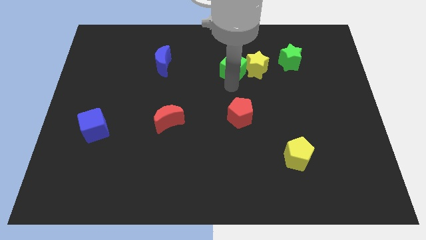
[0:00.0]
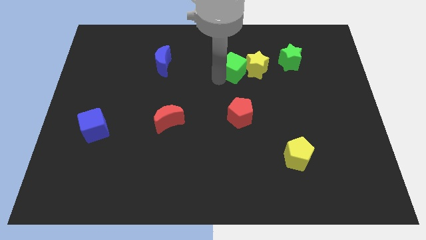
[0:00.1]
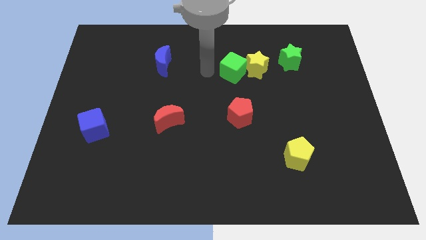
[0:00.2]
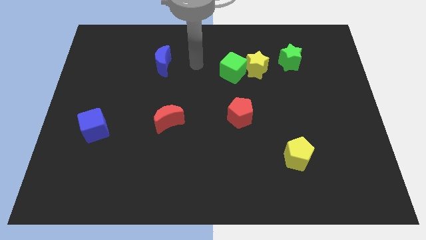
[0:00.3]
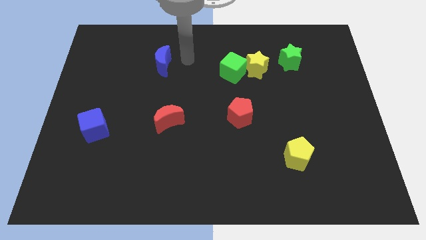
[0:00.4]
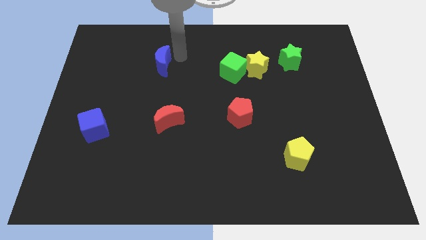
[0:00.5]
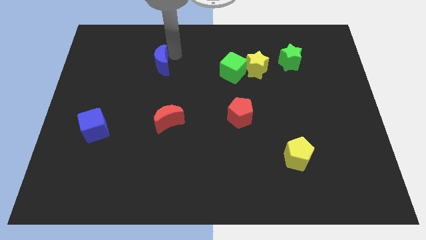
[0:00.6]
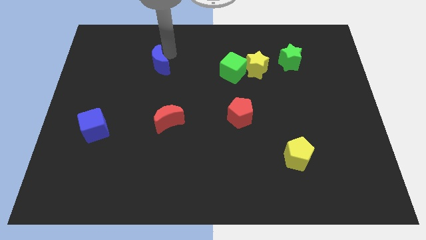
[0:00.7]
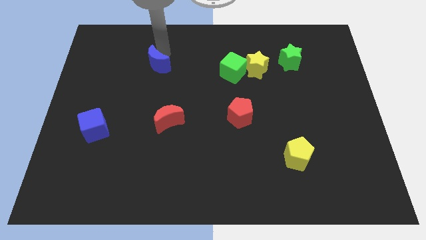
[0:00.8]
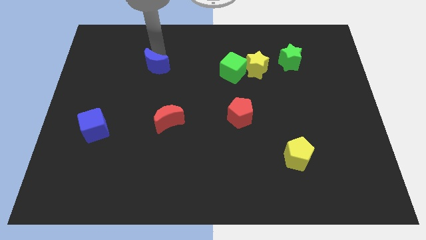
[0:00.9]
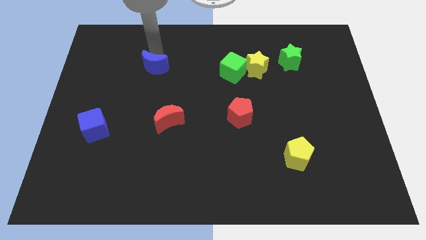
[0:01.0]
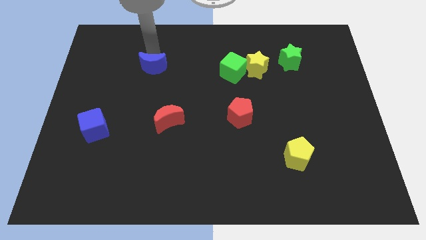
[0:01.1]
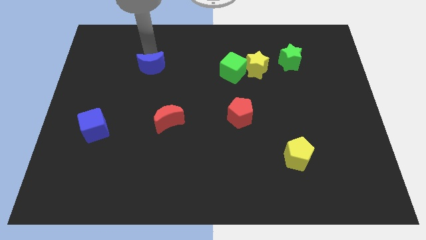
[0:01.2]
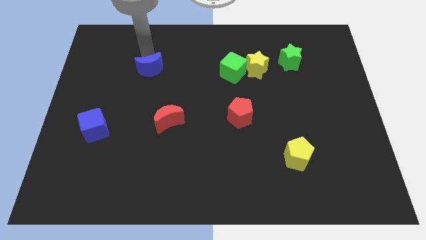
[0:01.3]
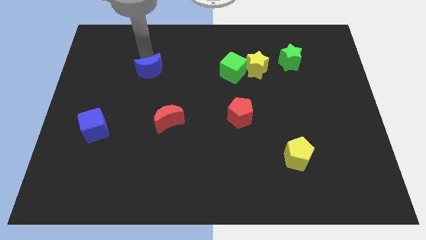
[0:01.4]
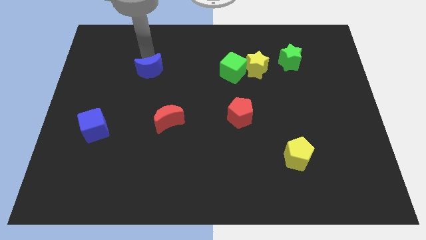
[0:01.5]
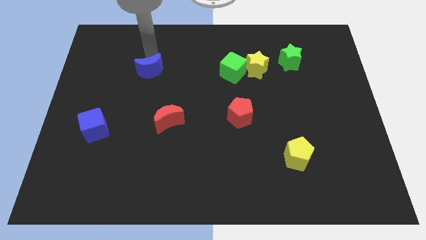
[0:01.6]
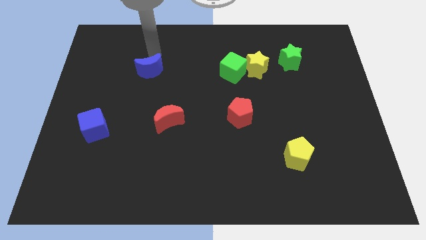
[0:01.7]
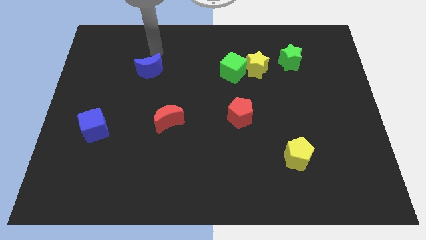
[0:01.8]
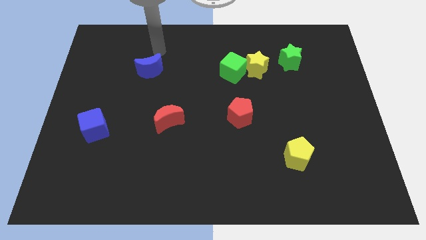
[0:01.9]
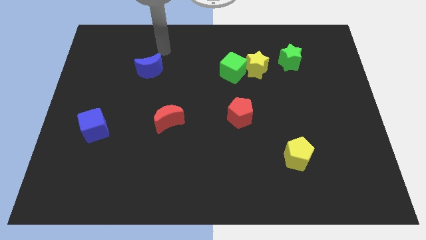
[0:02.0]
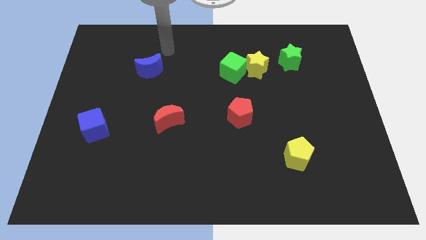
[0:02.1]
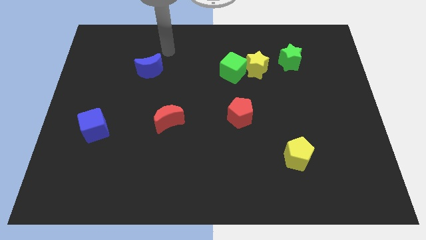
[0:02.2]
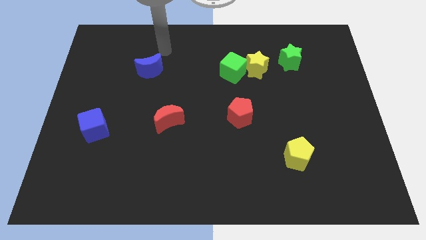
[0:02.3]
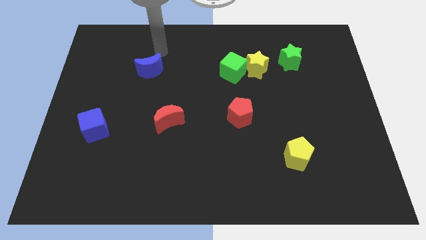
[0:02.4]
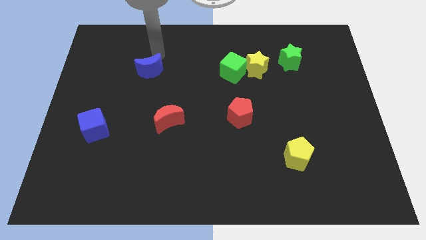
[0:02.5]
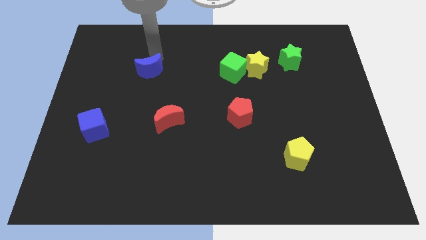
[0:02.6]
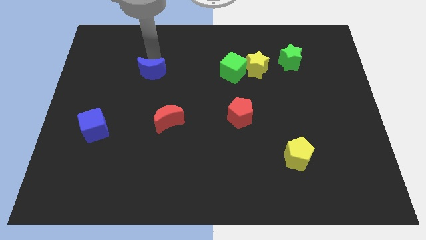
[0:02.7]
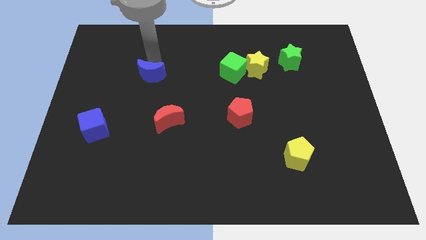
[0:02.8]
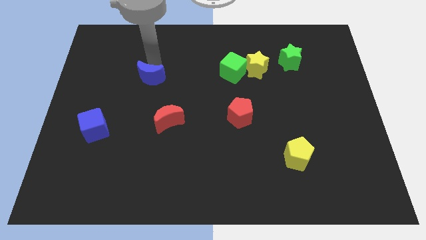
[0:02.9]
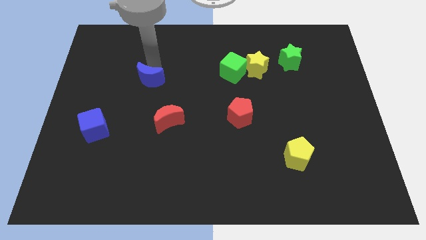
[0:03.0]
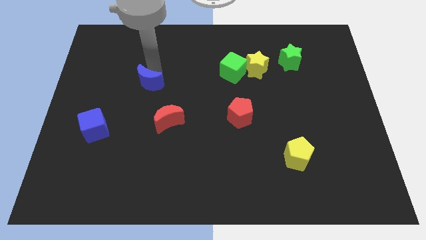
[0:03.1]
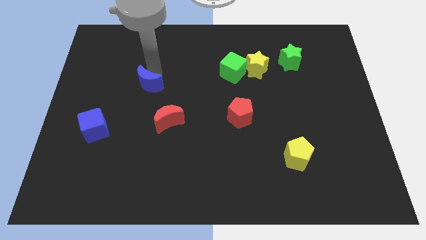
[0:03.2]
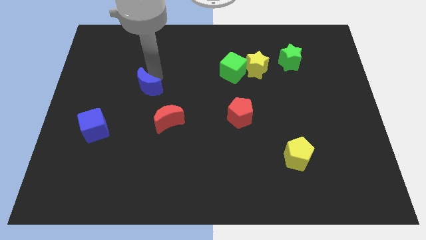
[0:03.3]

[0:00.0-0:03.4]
push the blue crescent slightly to the top of the red crescent

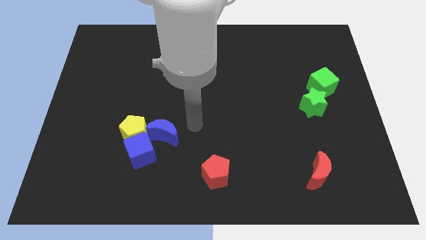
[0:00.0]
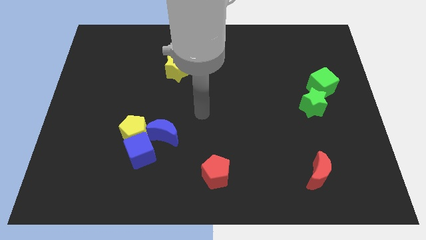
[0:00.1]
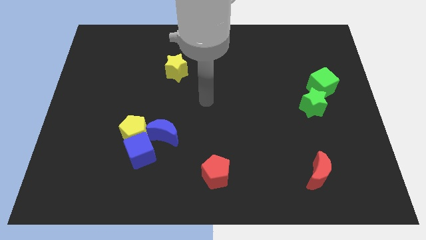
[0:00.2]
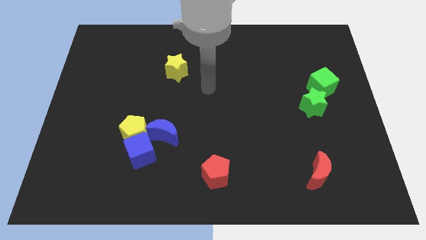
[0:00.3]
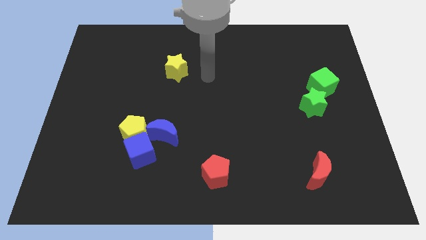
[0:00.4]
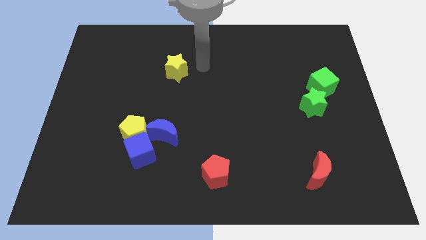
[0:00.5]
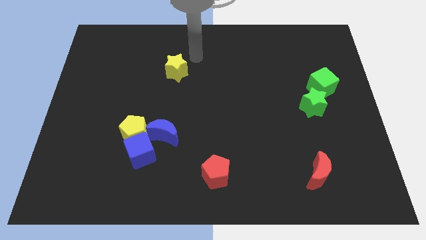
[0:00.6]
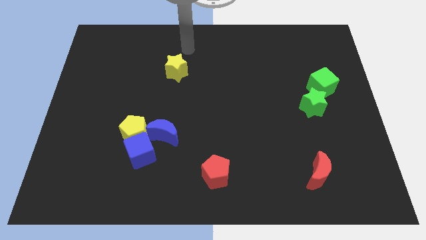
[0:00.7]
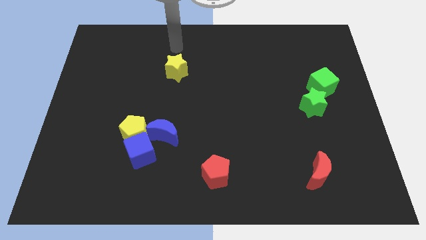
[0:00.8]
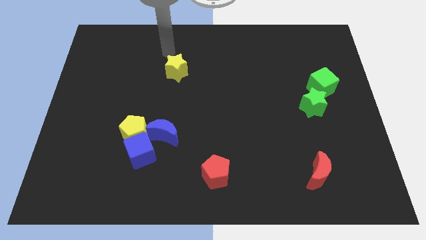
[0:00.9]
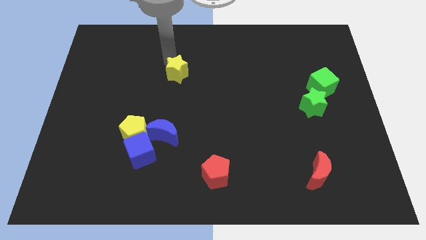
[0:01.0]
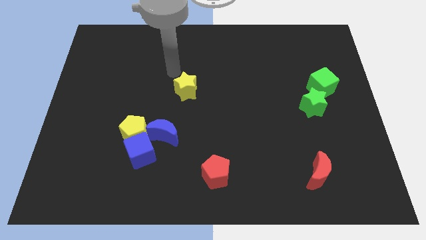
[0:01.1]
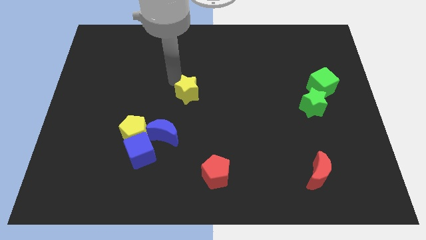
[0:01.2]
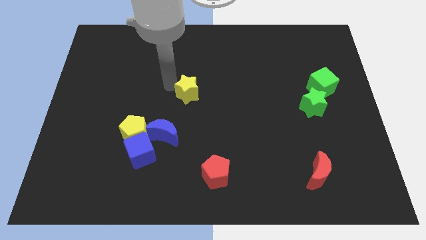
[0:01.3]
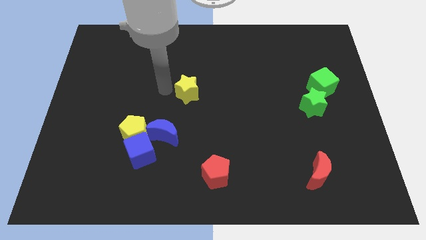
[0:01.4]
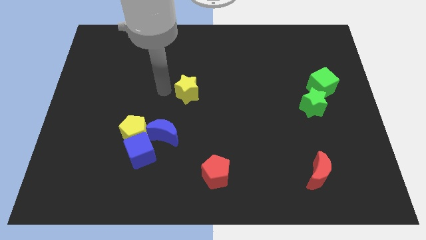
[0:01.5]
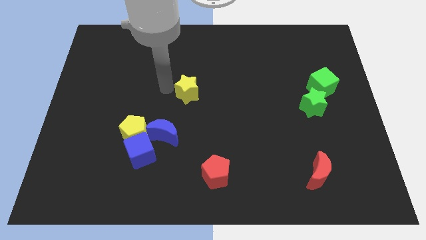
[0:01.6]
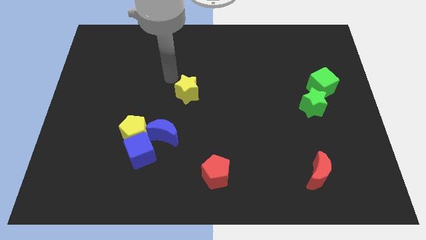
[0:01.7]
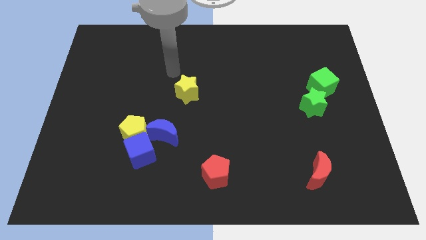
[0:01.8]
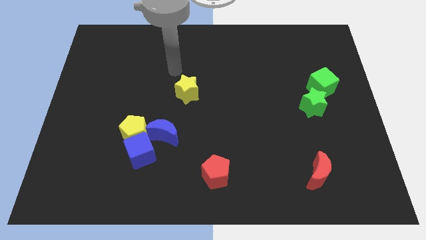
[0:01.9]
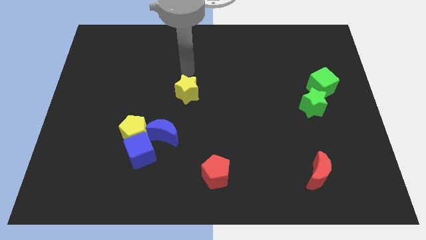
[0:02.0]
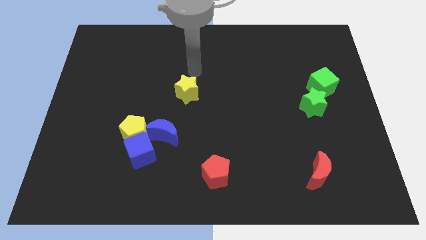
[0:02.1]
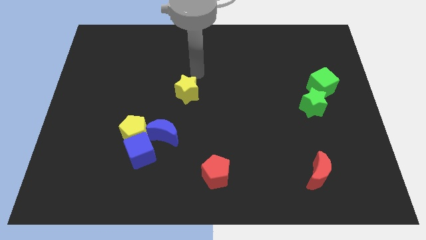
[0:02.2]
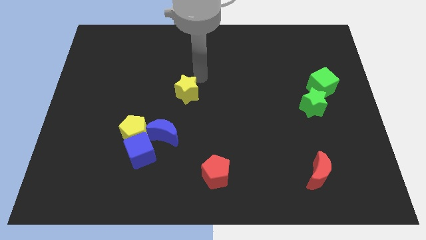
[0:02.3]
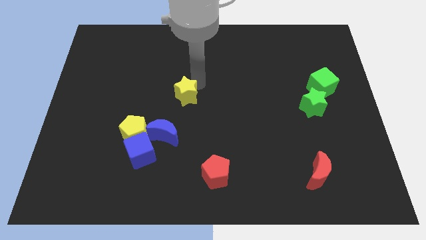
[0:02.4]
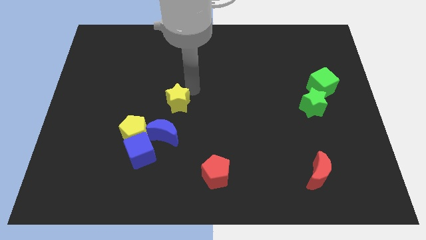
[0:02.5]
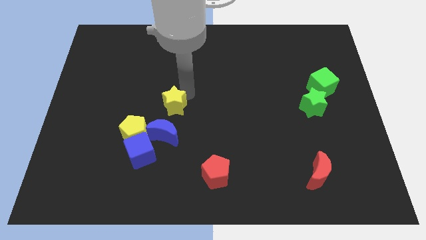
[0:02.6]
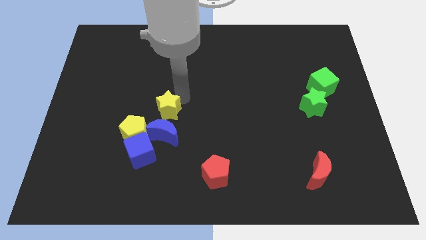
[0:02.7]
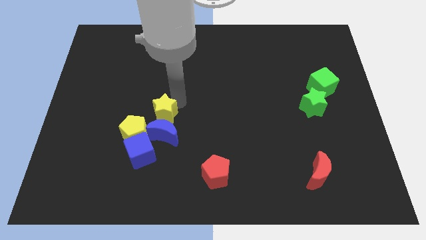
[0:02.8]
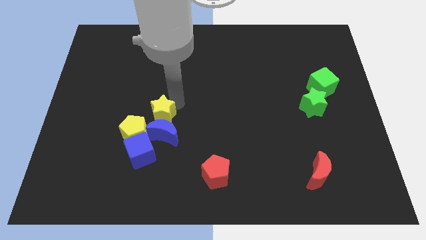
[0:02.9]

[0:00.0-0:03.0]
push the yellow star to the top of the blue crescent

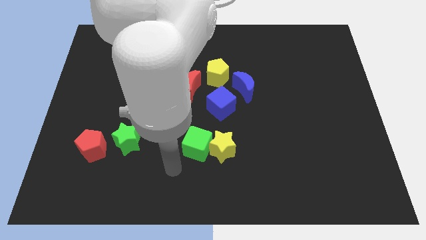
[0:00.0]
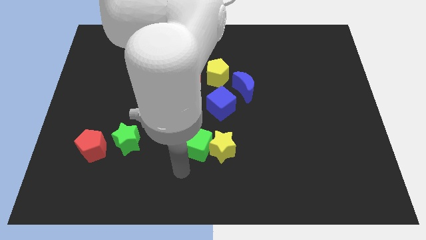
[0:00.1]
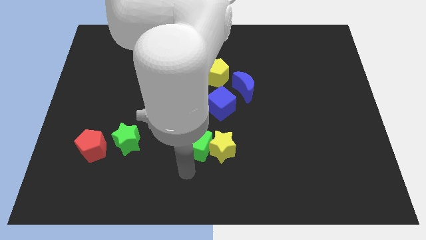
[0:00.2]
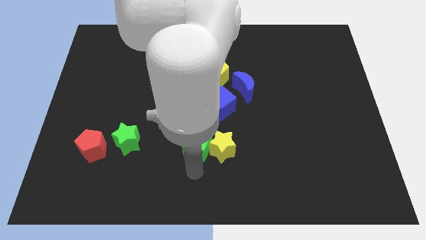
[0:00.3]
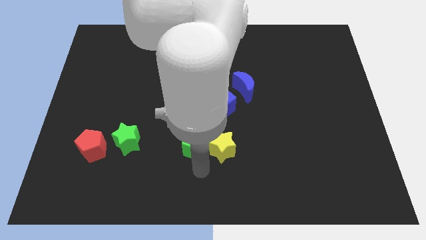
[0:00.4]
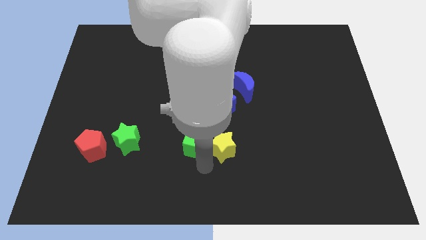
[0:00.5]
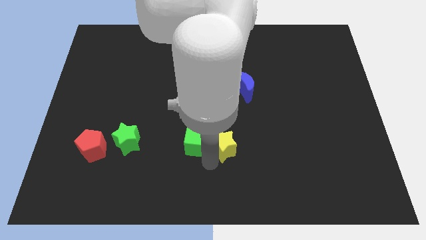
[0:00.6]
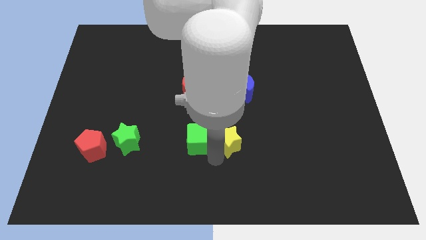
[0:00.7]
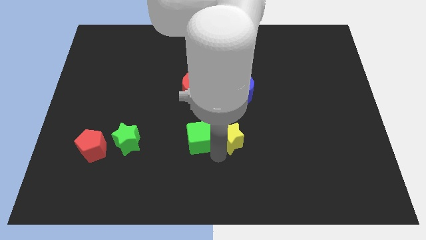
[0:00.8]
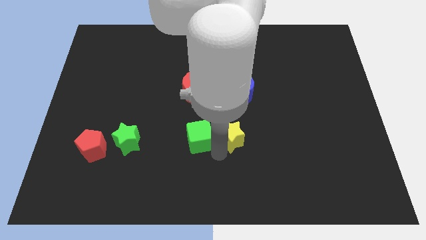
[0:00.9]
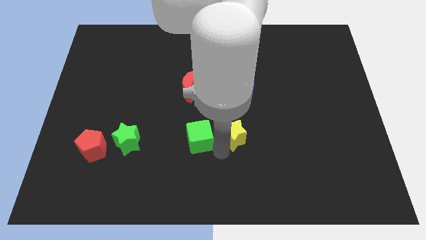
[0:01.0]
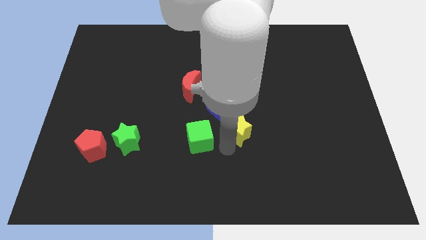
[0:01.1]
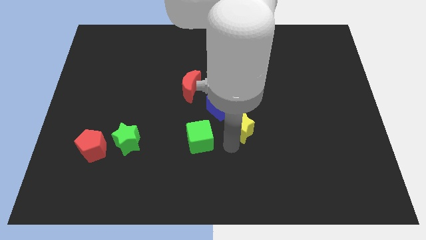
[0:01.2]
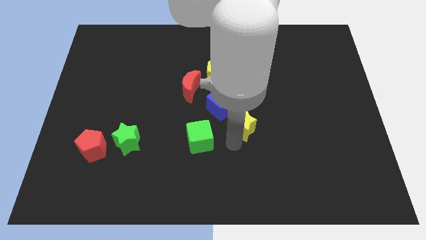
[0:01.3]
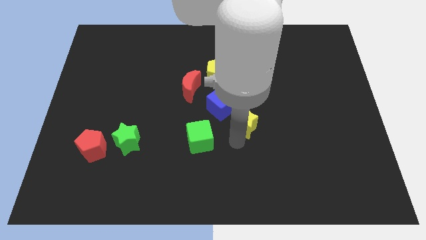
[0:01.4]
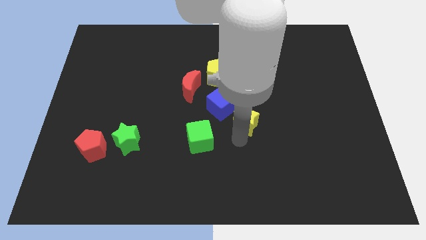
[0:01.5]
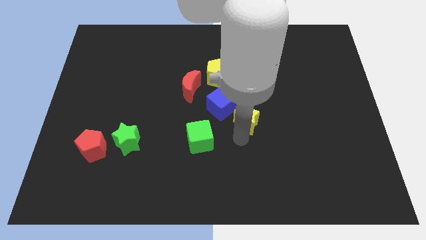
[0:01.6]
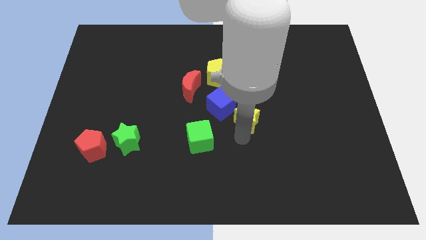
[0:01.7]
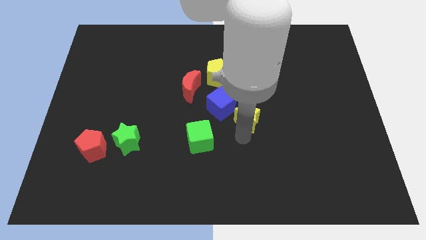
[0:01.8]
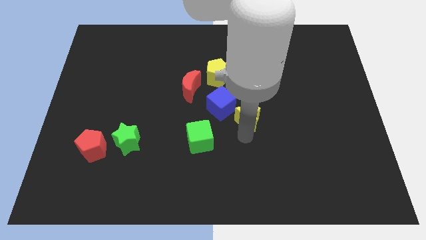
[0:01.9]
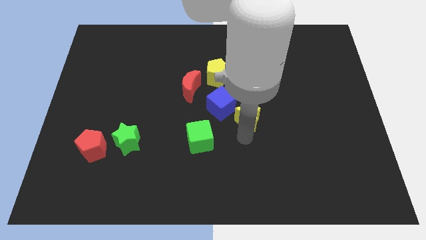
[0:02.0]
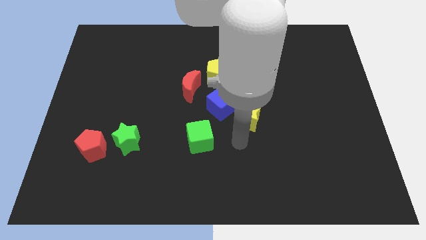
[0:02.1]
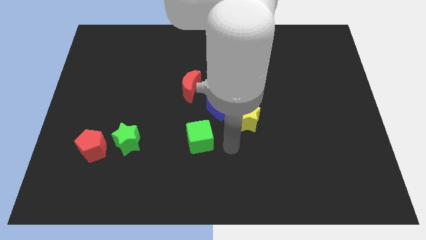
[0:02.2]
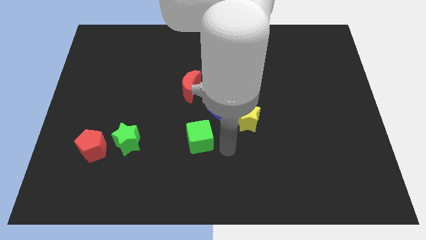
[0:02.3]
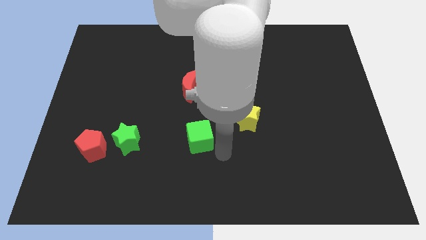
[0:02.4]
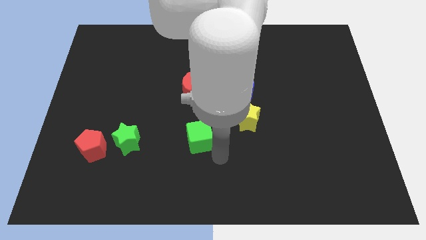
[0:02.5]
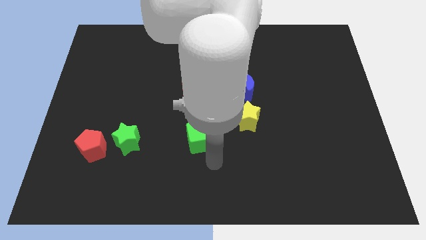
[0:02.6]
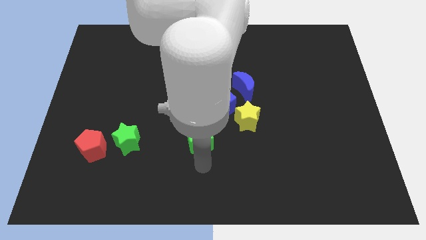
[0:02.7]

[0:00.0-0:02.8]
place the yellow star close to the blue cube
